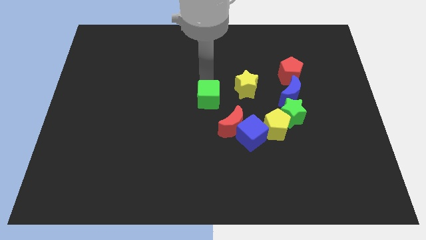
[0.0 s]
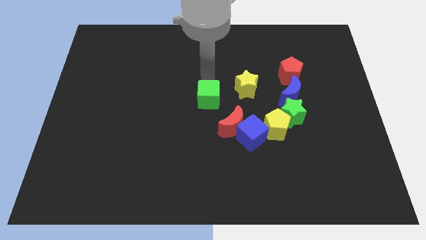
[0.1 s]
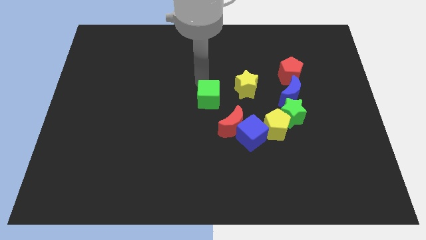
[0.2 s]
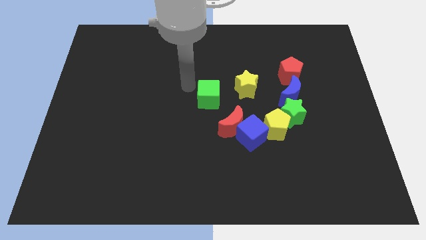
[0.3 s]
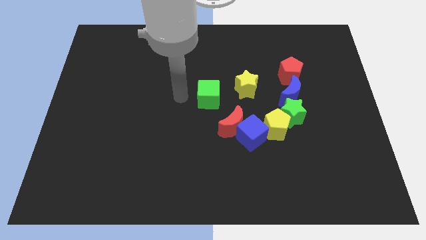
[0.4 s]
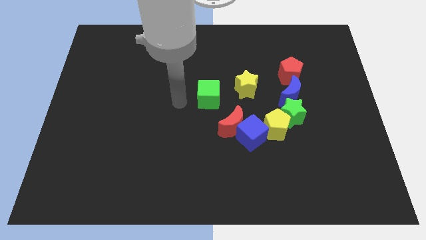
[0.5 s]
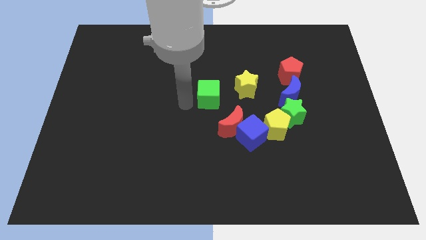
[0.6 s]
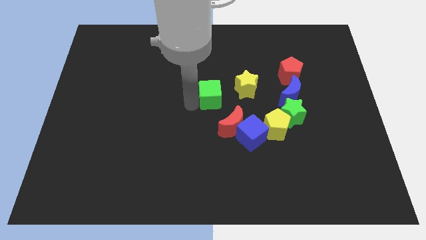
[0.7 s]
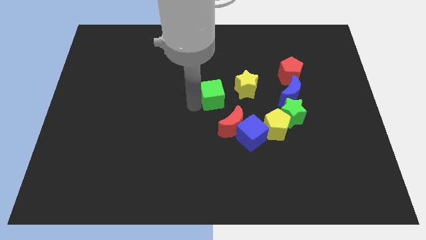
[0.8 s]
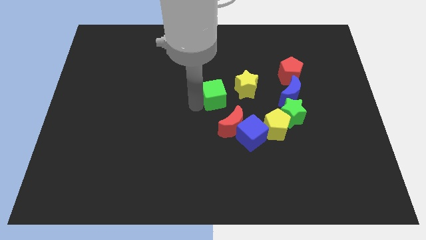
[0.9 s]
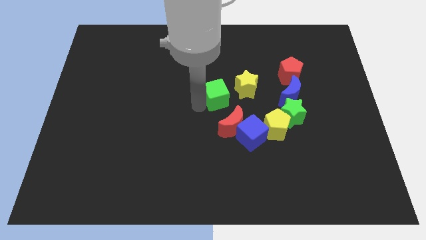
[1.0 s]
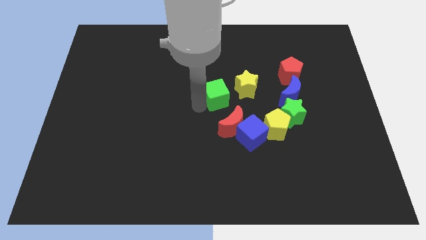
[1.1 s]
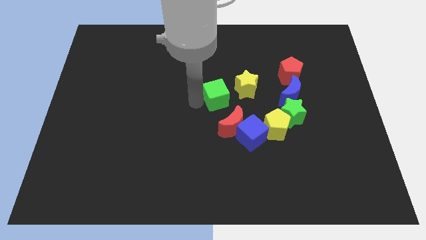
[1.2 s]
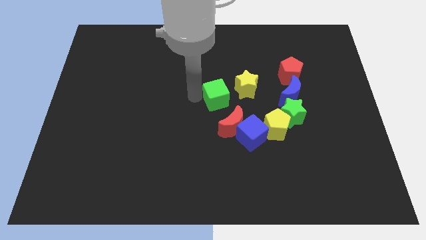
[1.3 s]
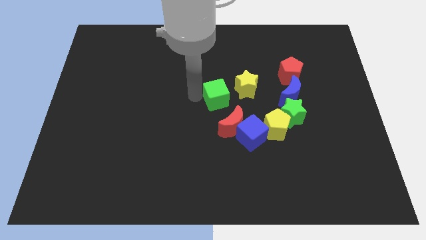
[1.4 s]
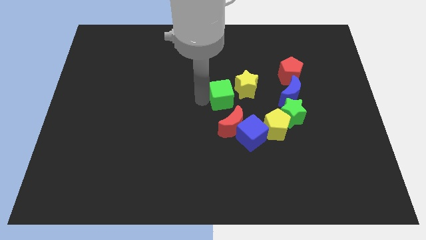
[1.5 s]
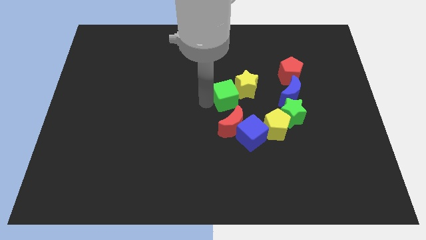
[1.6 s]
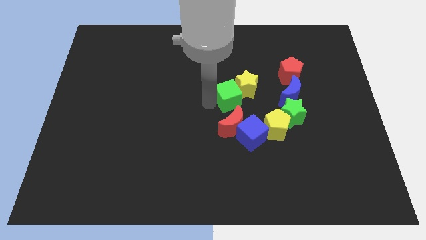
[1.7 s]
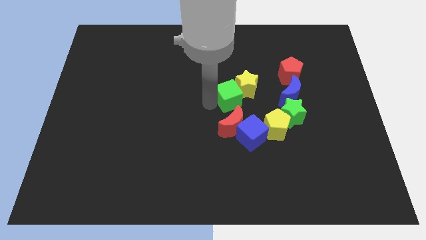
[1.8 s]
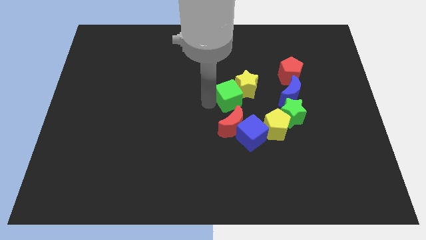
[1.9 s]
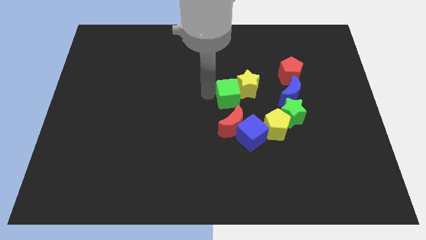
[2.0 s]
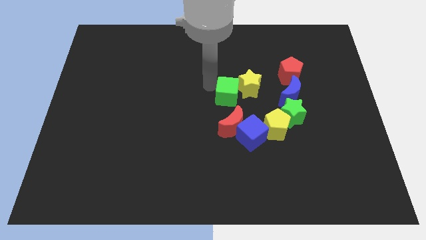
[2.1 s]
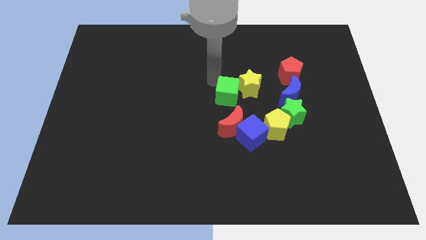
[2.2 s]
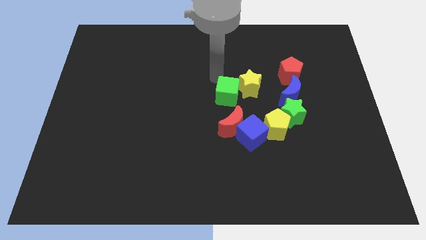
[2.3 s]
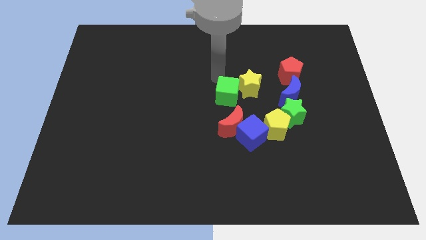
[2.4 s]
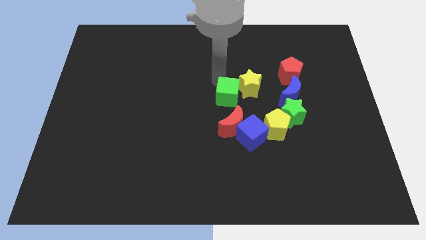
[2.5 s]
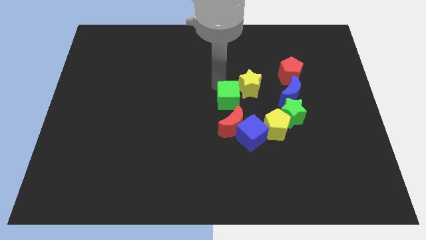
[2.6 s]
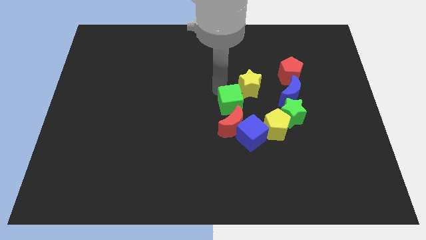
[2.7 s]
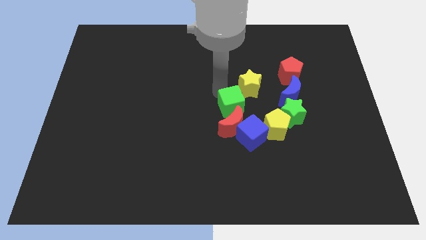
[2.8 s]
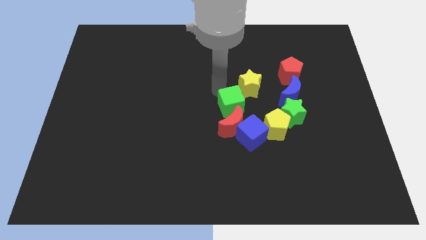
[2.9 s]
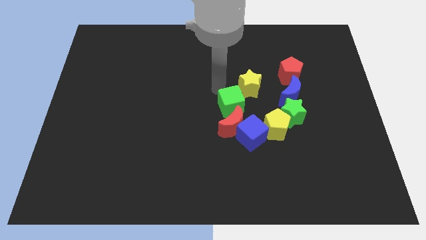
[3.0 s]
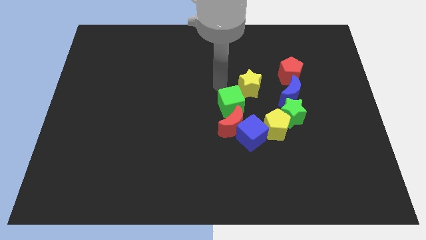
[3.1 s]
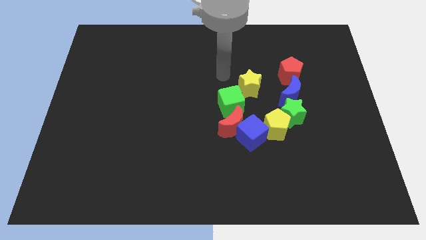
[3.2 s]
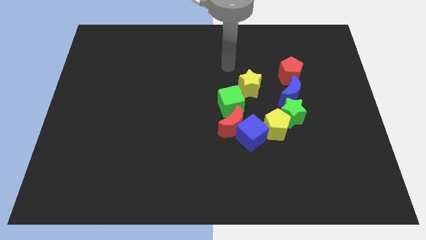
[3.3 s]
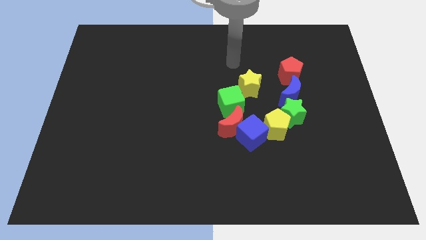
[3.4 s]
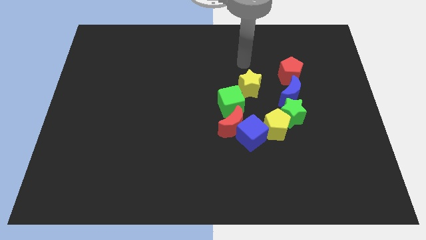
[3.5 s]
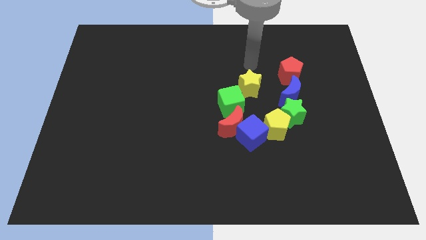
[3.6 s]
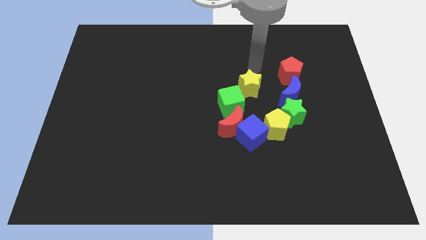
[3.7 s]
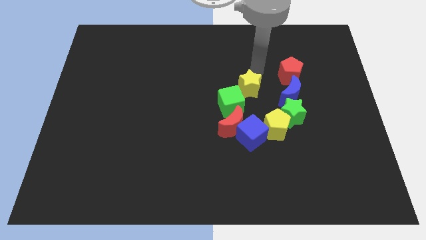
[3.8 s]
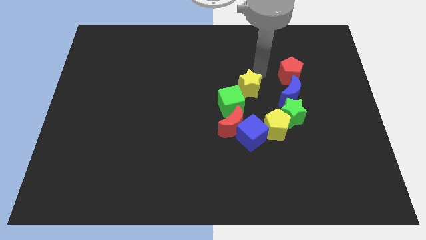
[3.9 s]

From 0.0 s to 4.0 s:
place the green cube between yellow star and red moon

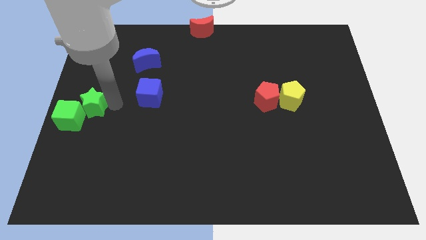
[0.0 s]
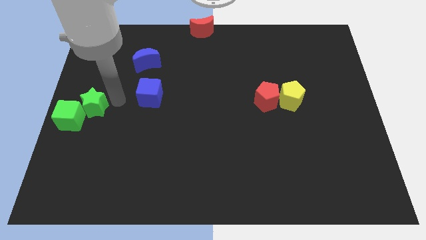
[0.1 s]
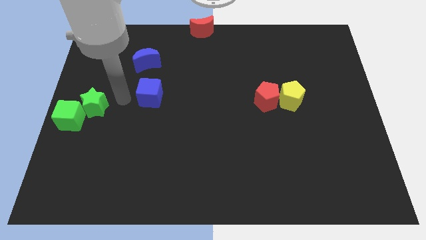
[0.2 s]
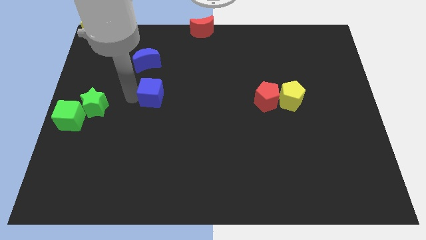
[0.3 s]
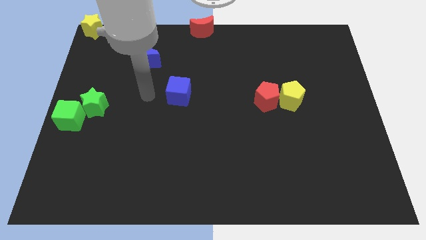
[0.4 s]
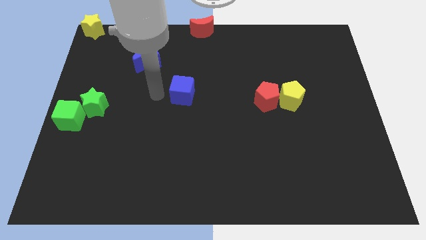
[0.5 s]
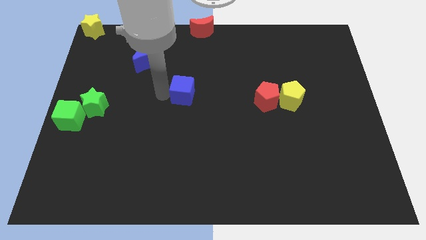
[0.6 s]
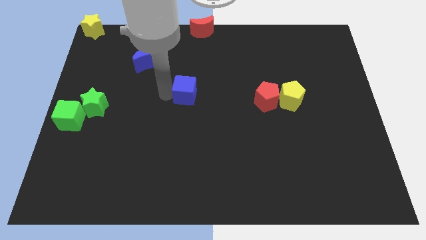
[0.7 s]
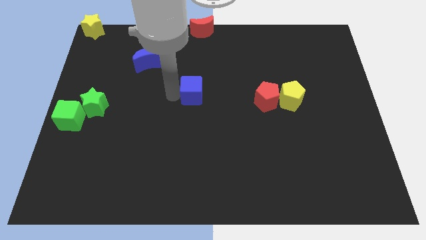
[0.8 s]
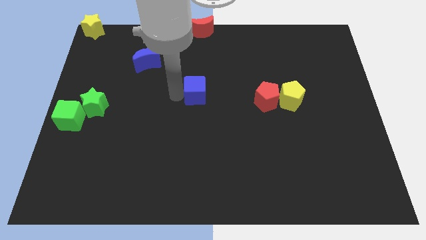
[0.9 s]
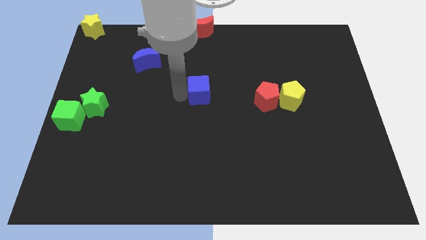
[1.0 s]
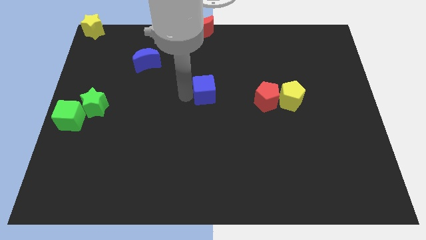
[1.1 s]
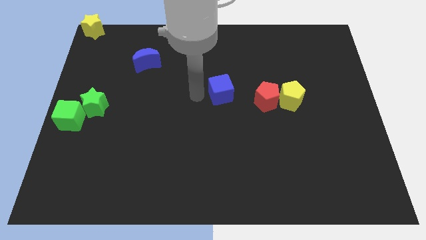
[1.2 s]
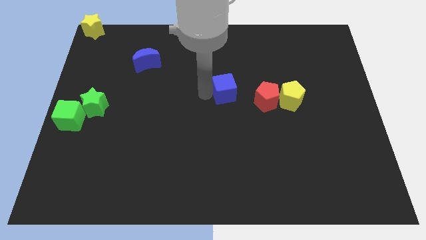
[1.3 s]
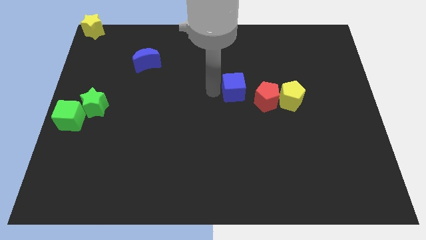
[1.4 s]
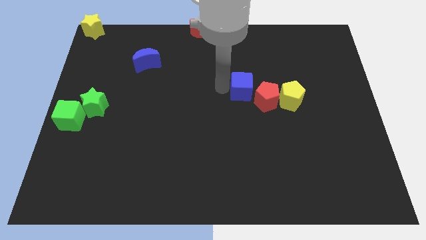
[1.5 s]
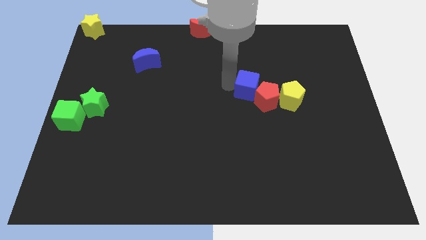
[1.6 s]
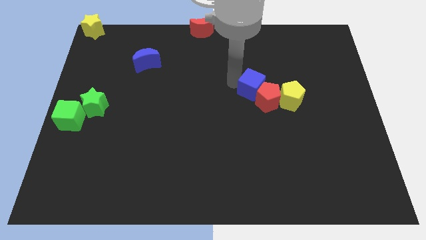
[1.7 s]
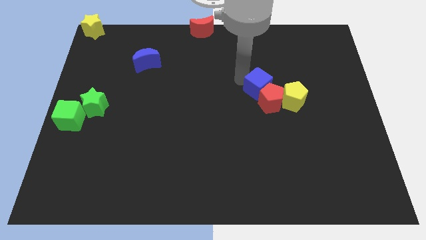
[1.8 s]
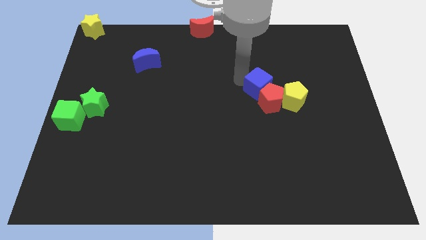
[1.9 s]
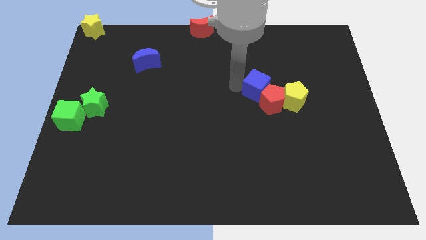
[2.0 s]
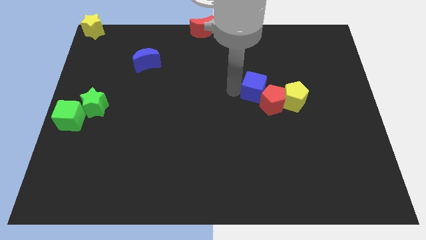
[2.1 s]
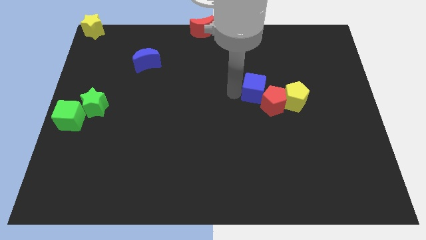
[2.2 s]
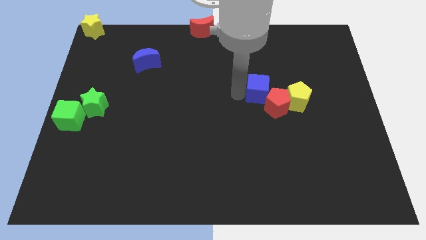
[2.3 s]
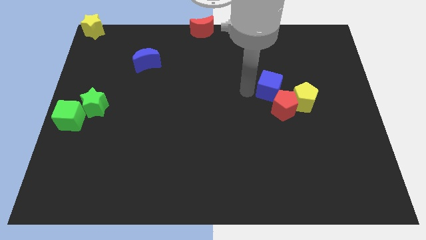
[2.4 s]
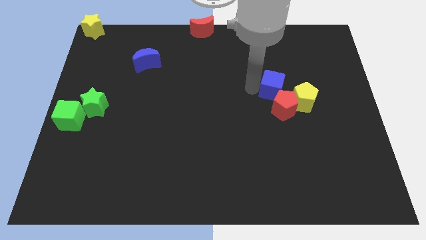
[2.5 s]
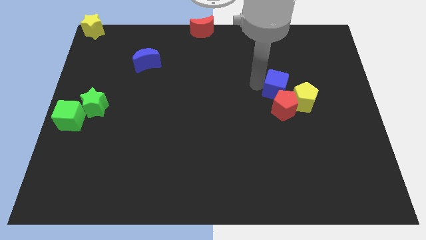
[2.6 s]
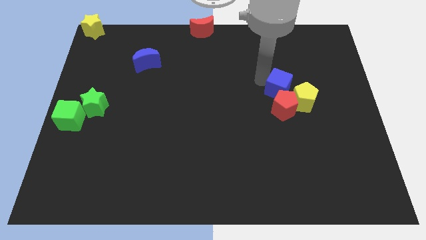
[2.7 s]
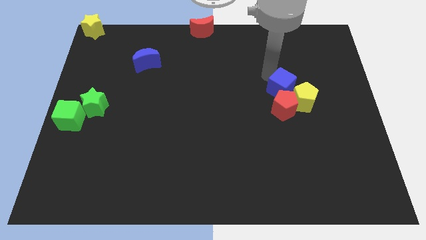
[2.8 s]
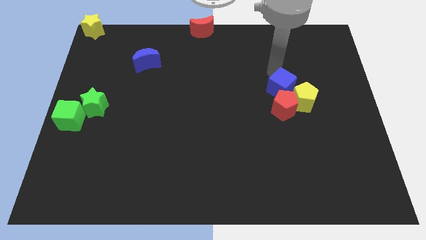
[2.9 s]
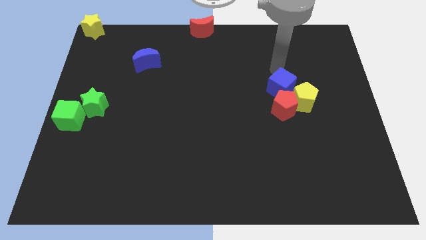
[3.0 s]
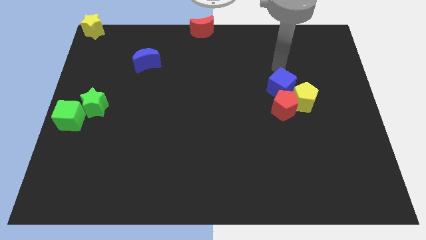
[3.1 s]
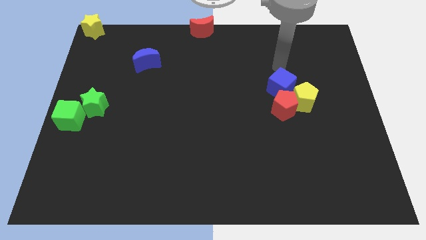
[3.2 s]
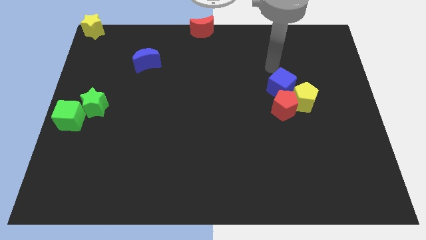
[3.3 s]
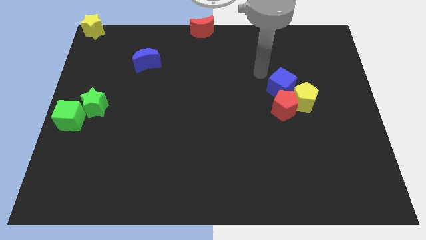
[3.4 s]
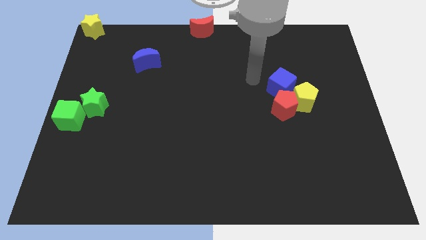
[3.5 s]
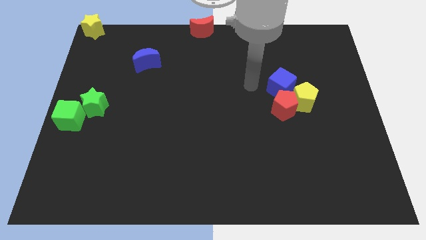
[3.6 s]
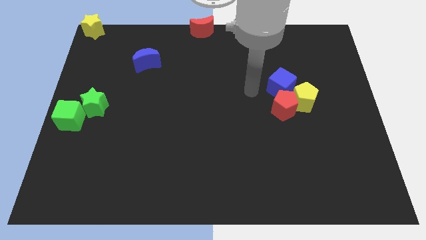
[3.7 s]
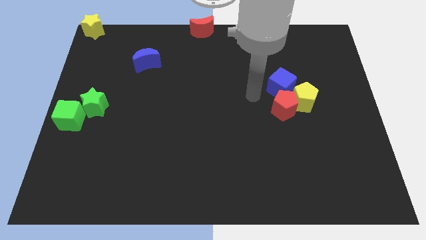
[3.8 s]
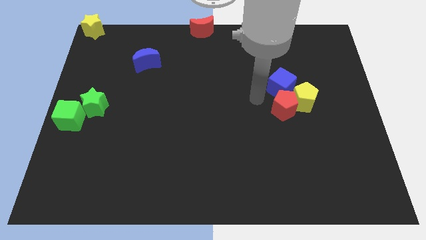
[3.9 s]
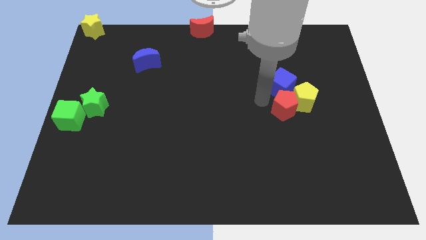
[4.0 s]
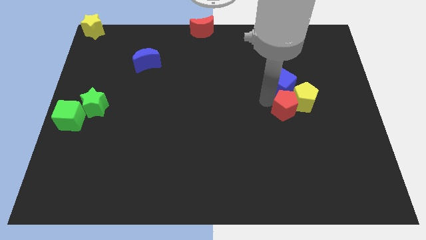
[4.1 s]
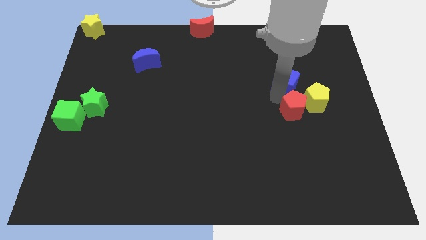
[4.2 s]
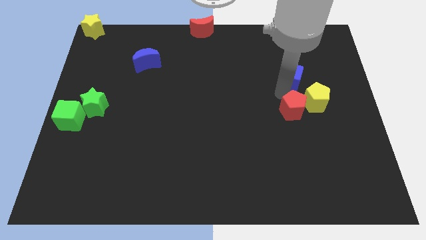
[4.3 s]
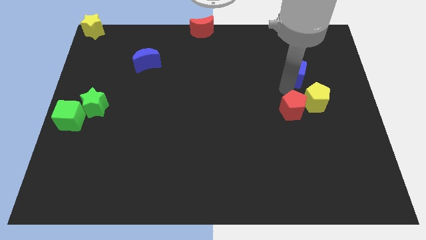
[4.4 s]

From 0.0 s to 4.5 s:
push the blue cube into the red pentagon

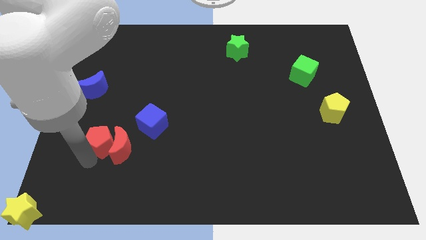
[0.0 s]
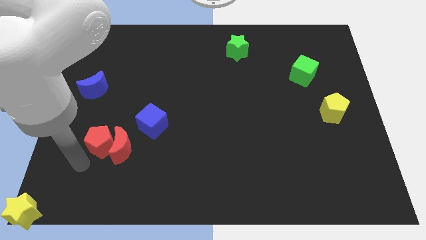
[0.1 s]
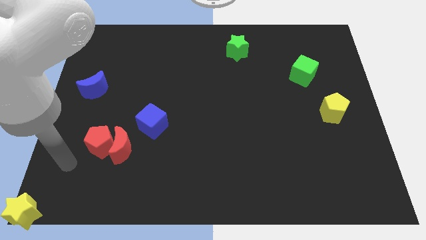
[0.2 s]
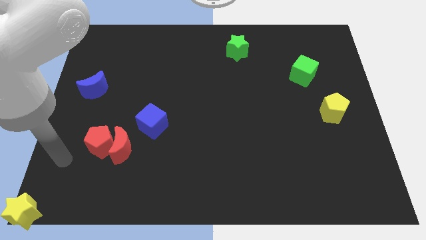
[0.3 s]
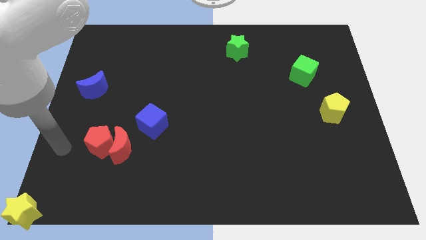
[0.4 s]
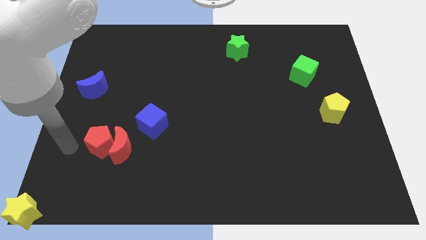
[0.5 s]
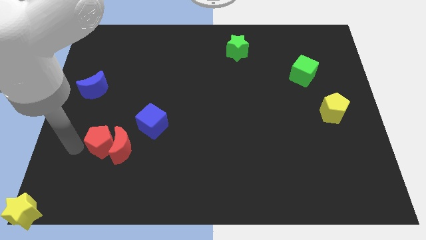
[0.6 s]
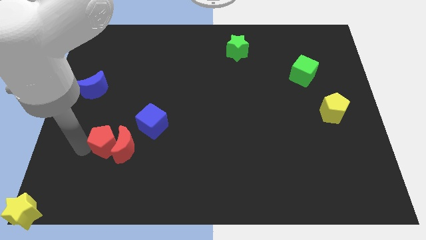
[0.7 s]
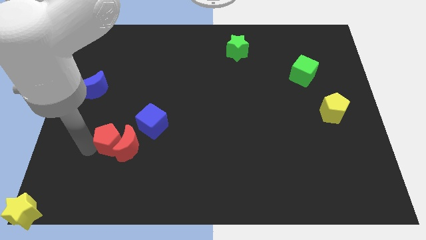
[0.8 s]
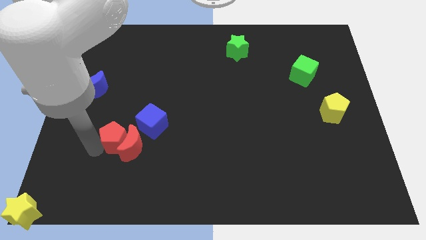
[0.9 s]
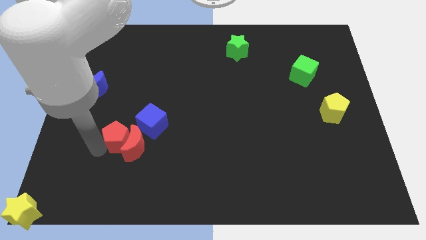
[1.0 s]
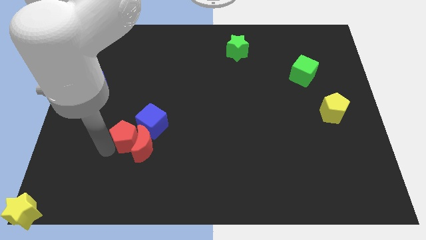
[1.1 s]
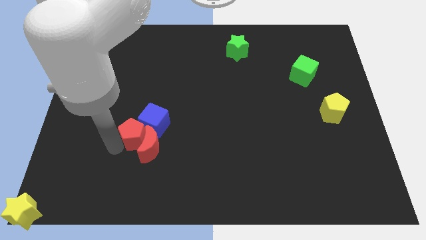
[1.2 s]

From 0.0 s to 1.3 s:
drag red blocks below the blue cube
